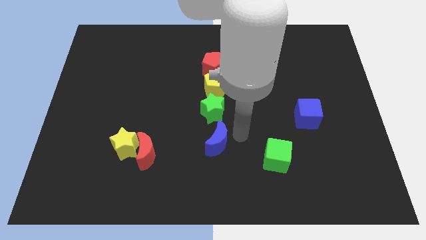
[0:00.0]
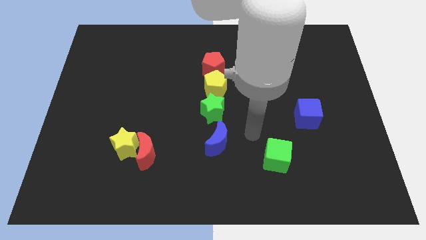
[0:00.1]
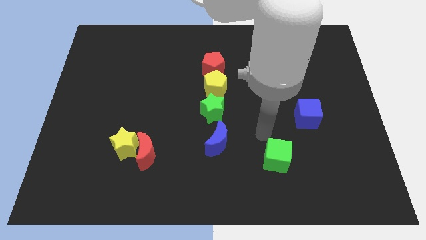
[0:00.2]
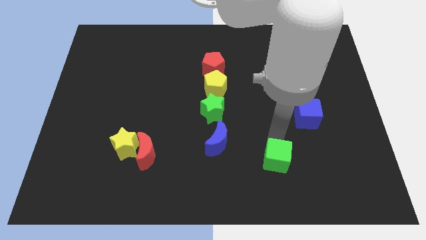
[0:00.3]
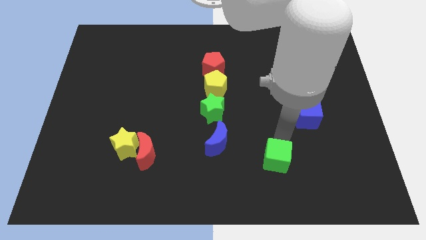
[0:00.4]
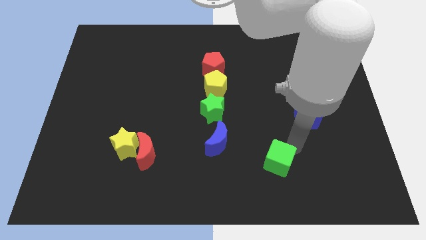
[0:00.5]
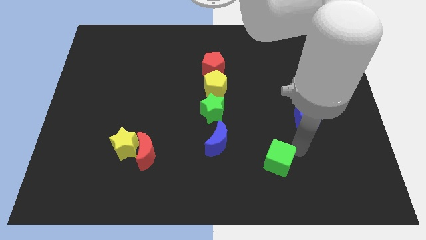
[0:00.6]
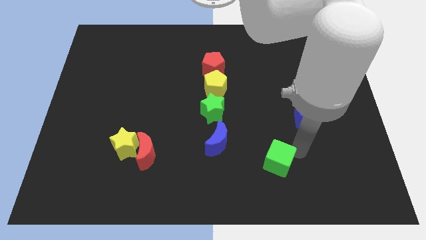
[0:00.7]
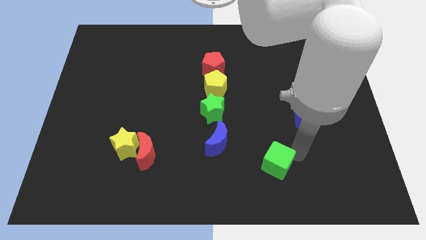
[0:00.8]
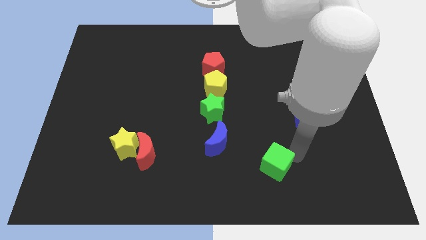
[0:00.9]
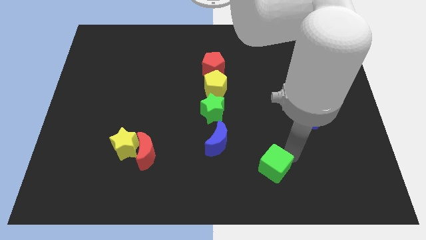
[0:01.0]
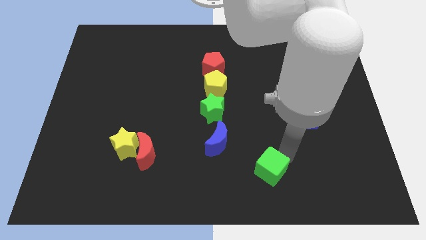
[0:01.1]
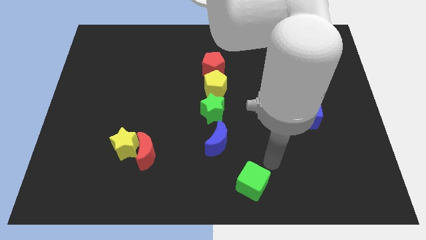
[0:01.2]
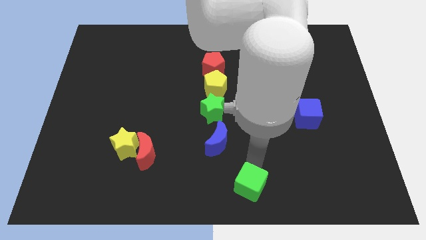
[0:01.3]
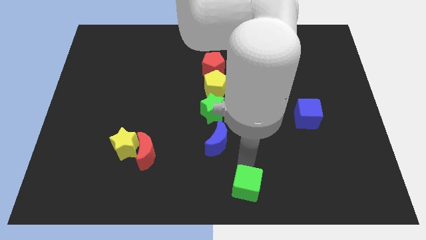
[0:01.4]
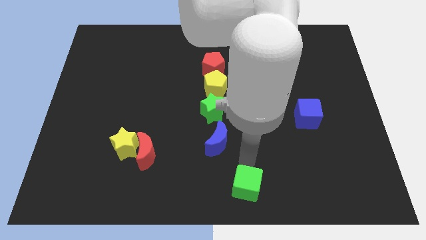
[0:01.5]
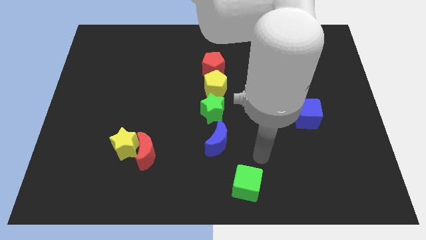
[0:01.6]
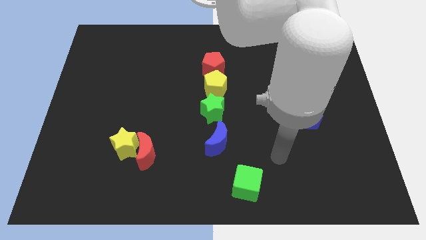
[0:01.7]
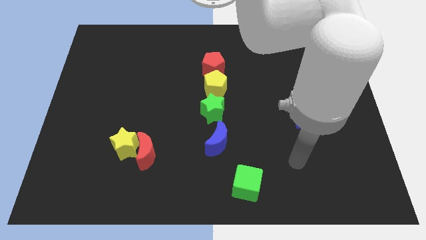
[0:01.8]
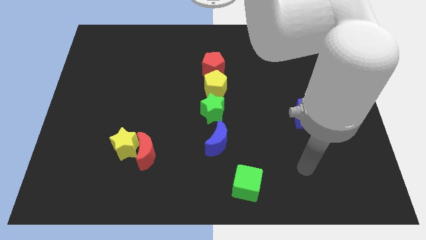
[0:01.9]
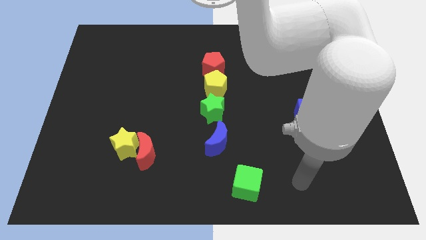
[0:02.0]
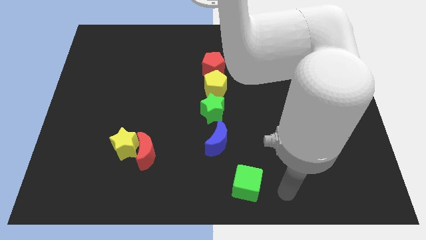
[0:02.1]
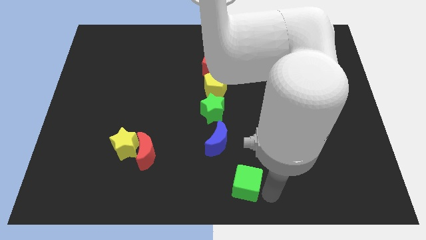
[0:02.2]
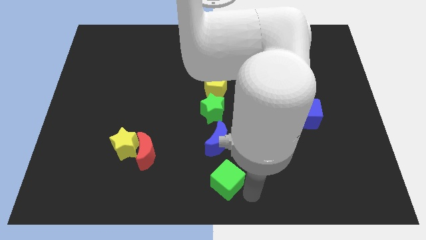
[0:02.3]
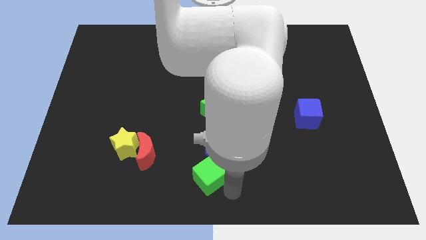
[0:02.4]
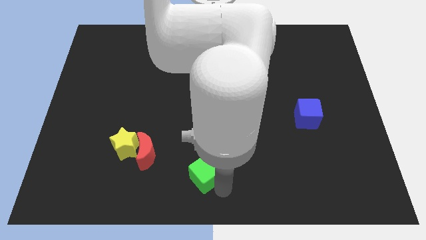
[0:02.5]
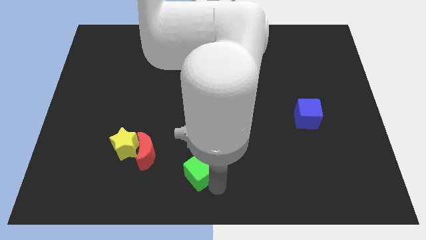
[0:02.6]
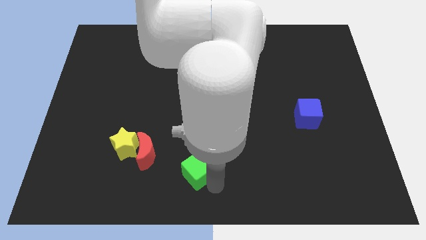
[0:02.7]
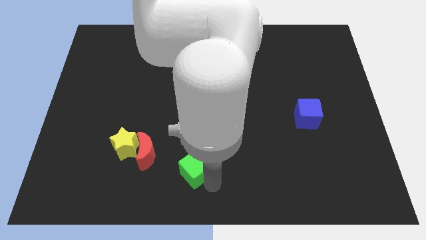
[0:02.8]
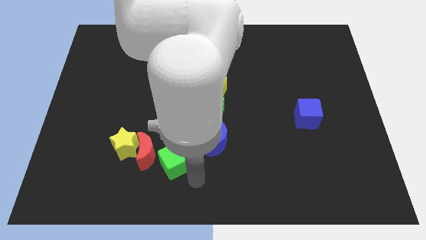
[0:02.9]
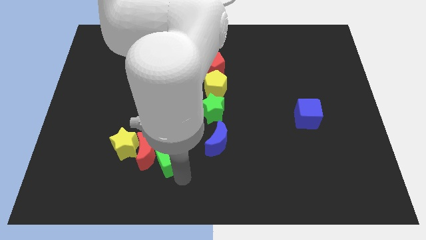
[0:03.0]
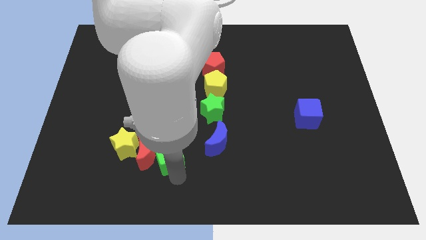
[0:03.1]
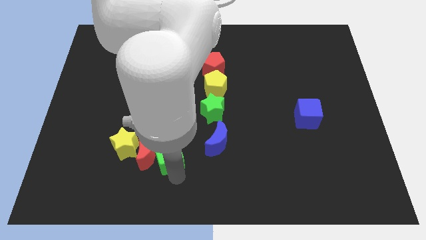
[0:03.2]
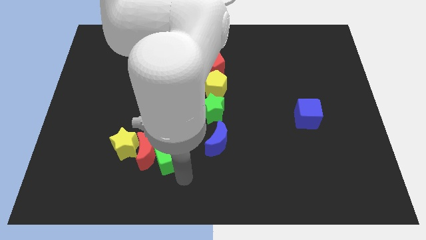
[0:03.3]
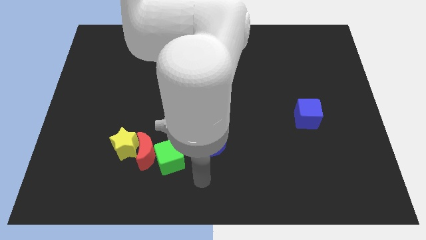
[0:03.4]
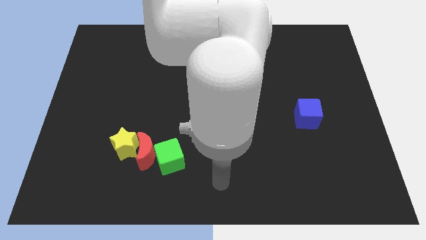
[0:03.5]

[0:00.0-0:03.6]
move the green cube to the right of the red crescent

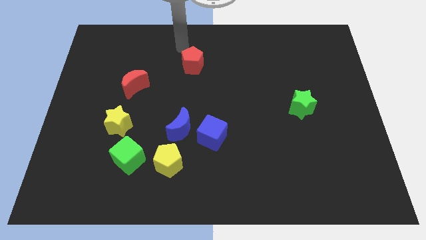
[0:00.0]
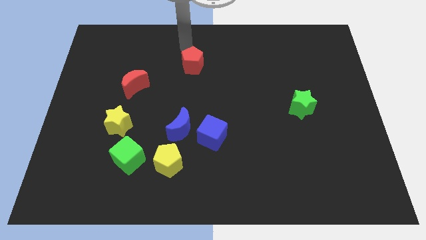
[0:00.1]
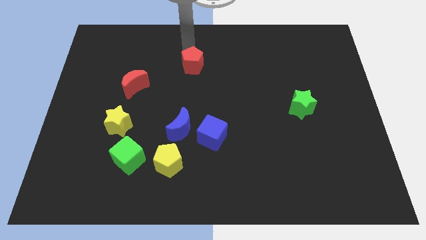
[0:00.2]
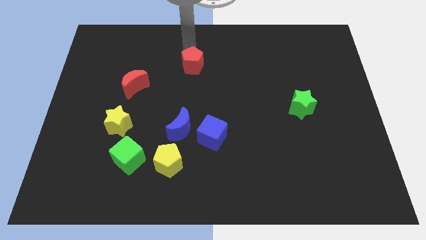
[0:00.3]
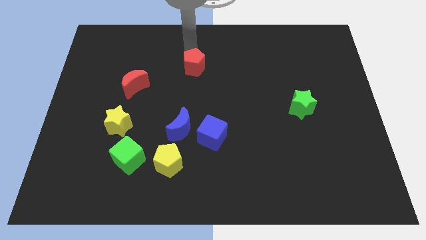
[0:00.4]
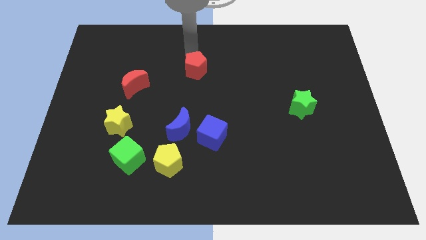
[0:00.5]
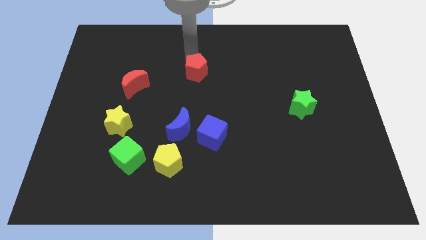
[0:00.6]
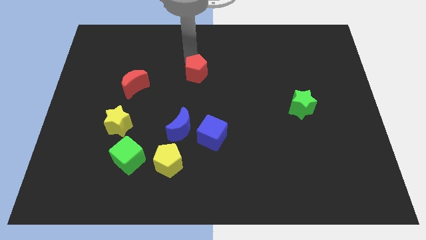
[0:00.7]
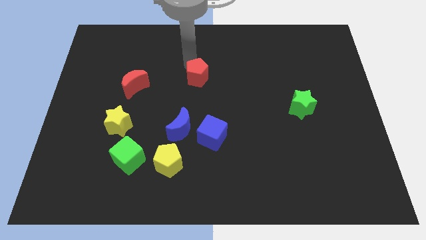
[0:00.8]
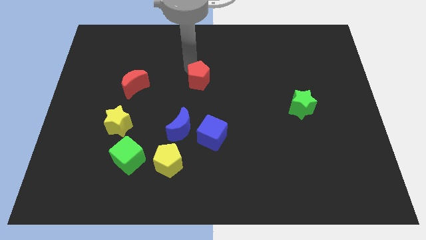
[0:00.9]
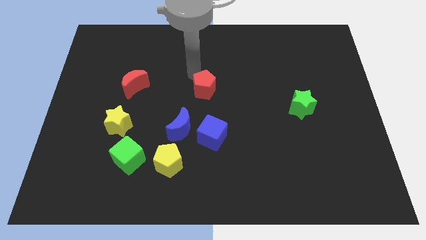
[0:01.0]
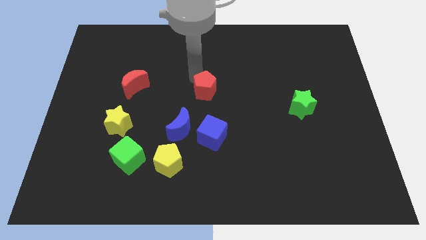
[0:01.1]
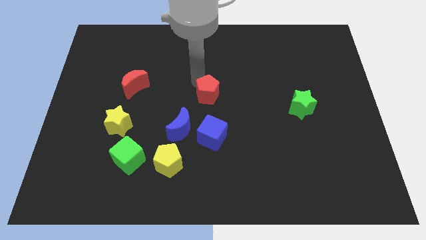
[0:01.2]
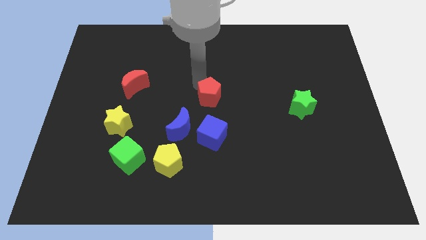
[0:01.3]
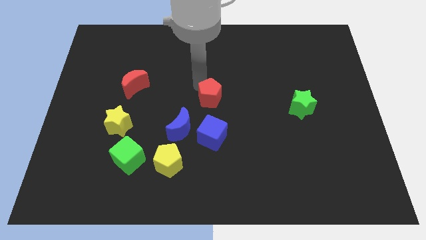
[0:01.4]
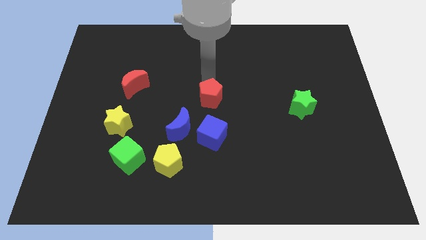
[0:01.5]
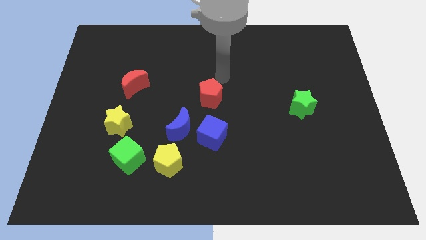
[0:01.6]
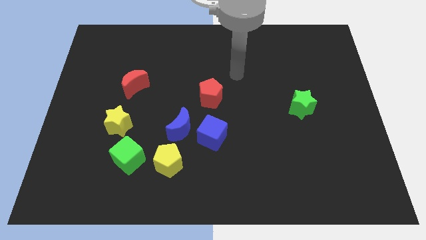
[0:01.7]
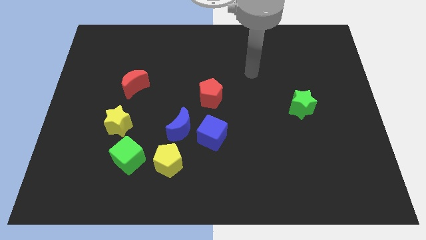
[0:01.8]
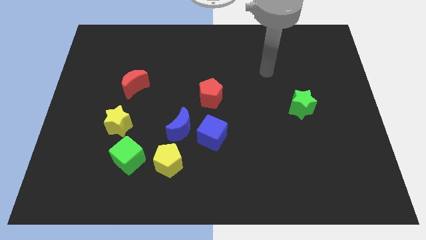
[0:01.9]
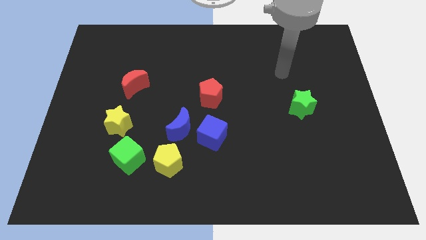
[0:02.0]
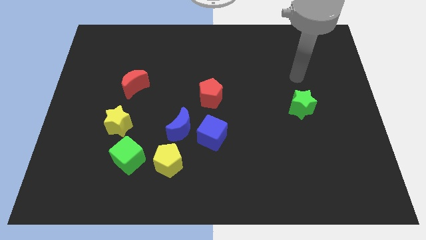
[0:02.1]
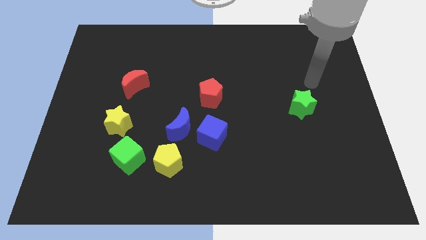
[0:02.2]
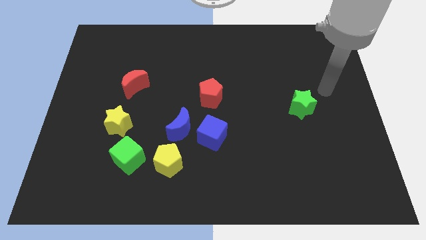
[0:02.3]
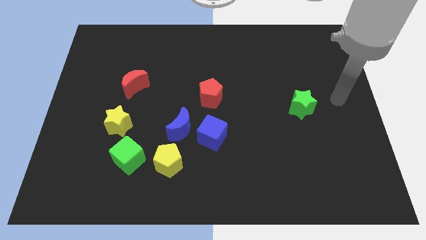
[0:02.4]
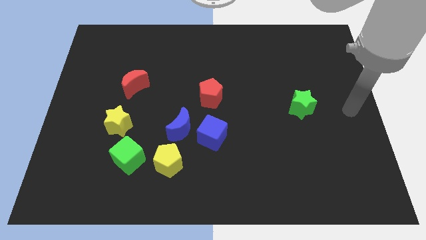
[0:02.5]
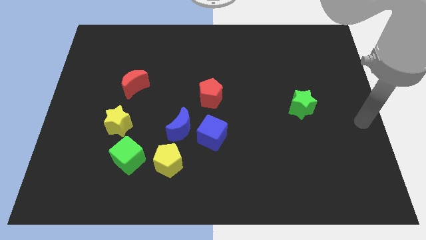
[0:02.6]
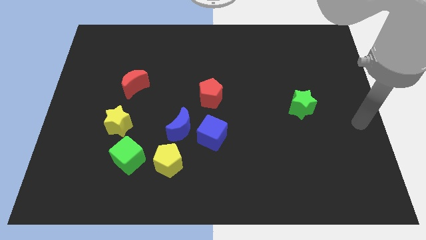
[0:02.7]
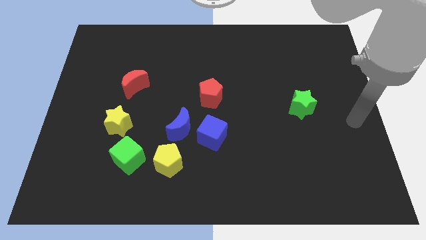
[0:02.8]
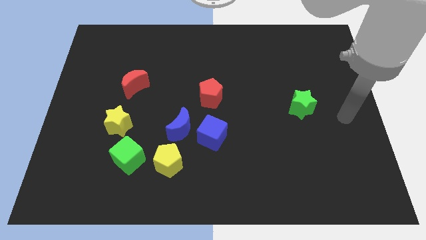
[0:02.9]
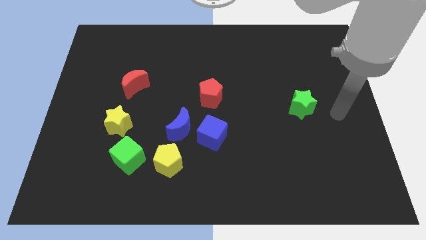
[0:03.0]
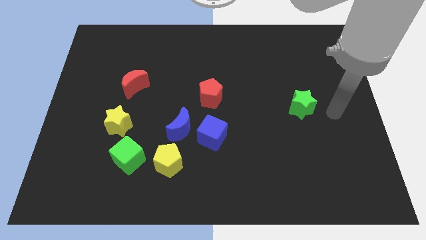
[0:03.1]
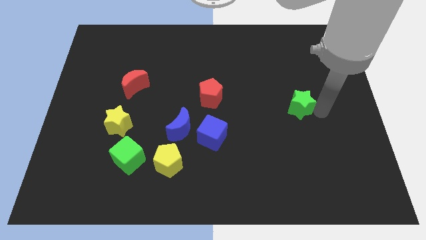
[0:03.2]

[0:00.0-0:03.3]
place the red pentagon vertically above the blue cube

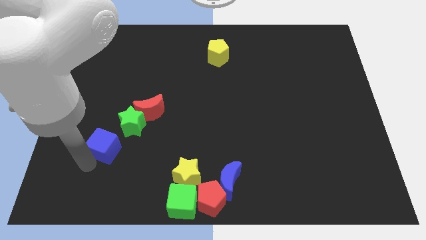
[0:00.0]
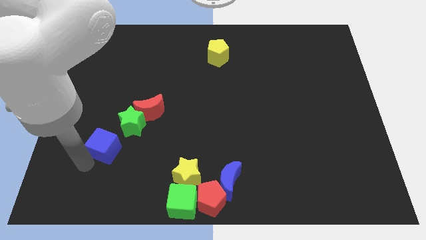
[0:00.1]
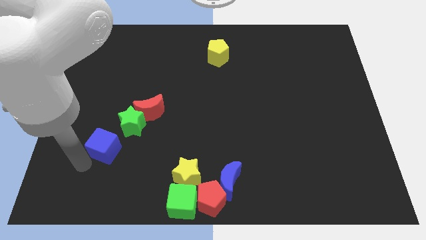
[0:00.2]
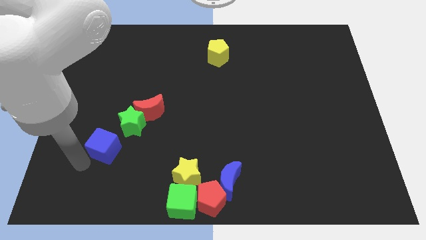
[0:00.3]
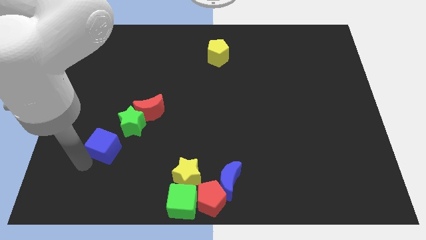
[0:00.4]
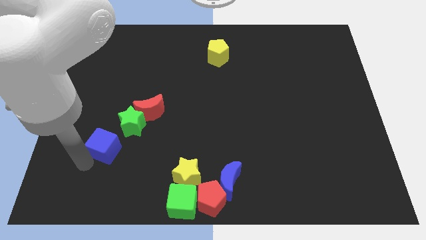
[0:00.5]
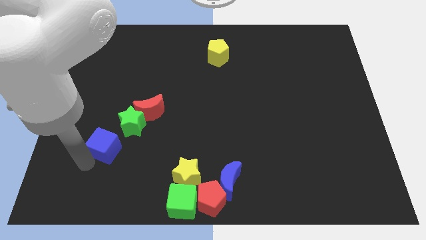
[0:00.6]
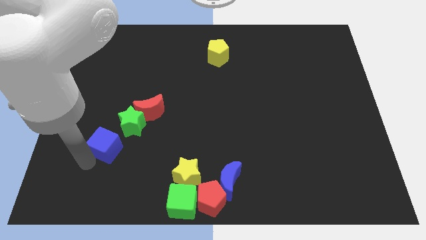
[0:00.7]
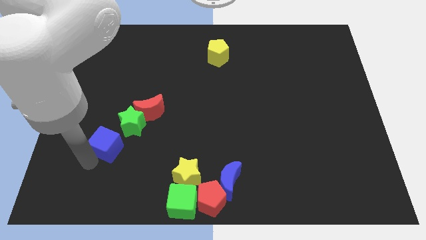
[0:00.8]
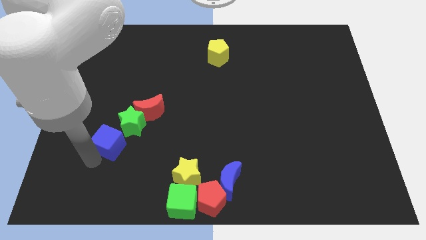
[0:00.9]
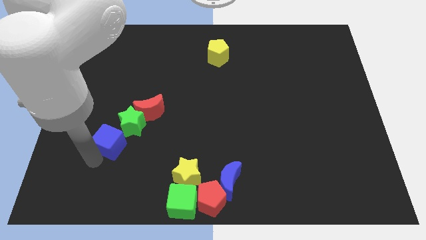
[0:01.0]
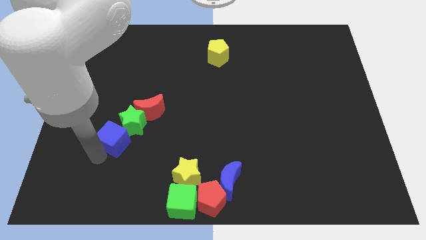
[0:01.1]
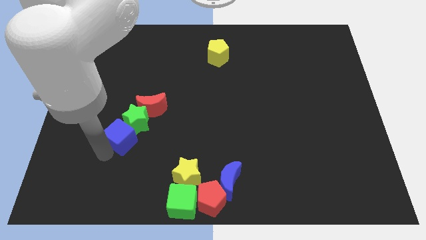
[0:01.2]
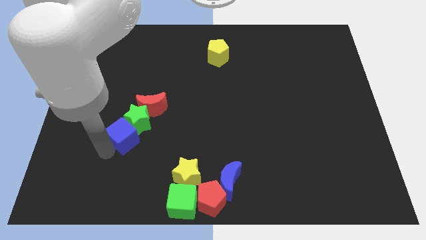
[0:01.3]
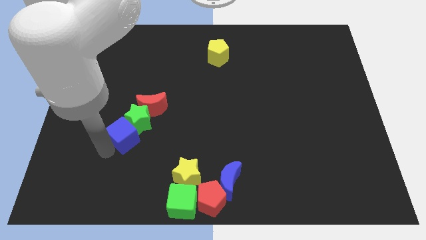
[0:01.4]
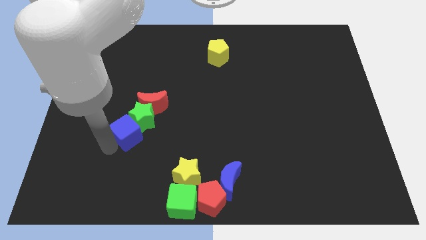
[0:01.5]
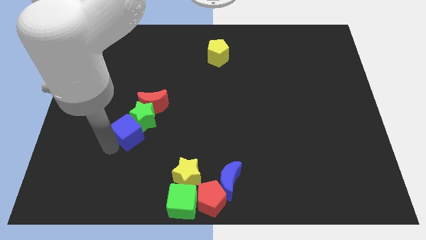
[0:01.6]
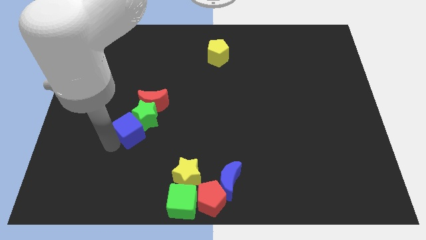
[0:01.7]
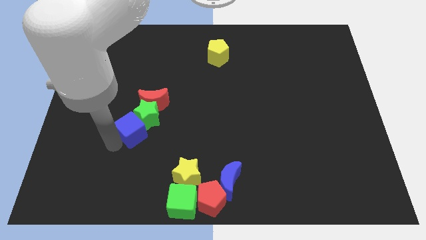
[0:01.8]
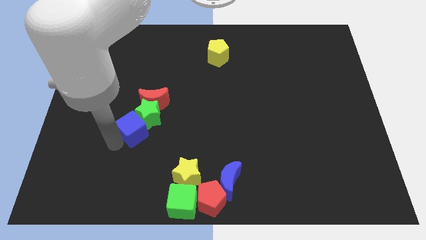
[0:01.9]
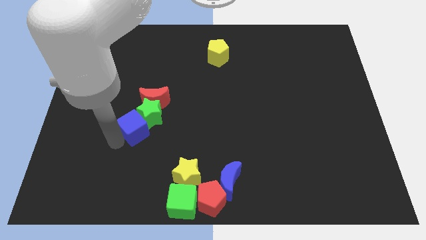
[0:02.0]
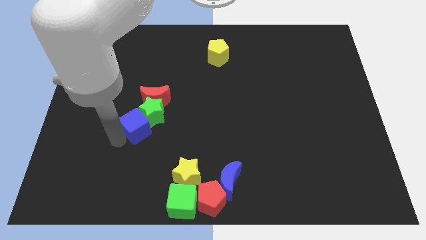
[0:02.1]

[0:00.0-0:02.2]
slide the blue cube into the green star
